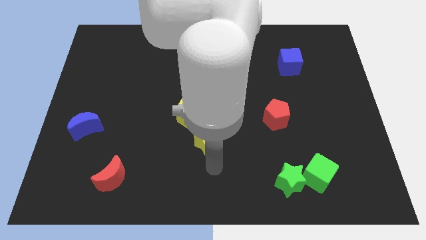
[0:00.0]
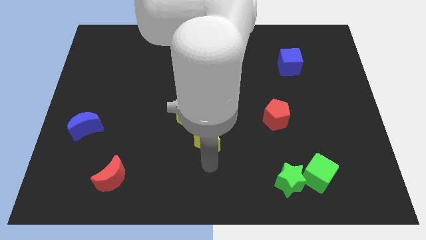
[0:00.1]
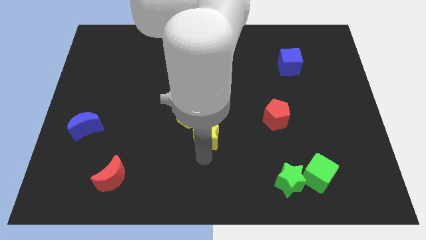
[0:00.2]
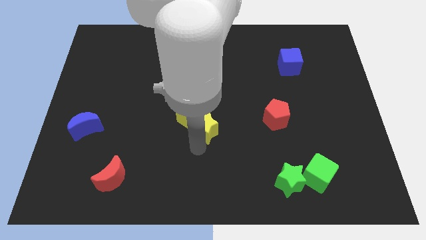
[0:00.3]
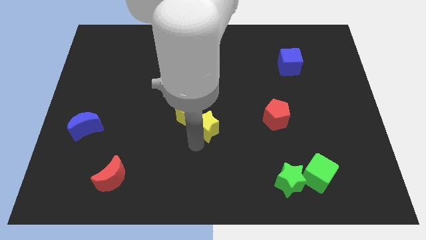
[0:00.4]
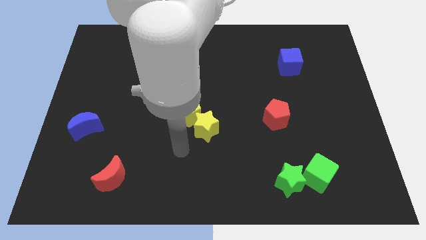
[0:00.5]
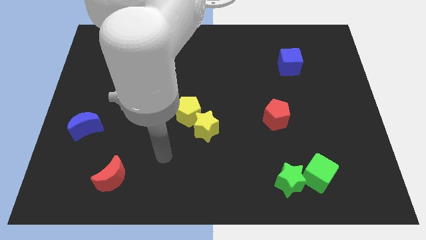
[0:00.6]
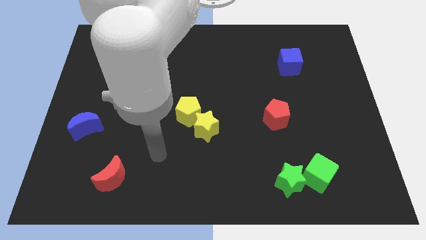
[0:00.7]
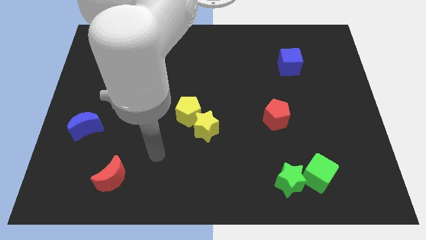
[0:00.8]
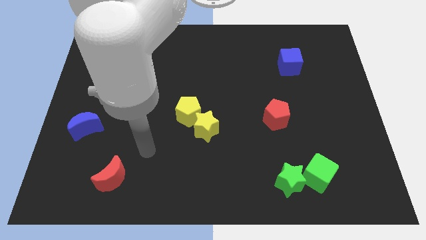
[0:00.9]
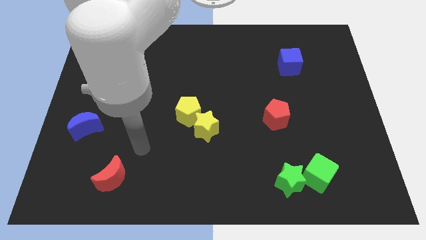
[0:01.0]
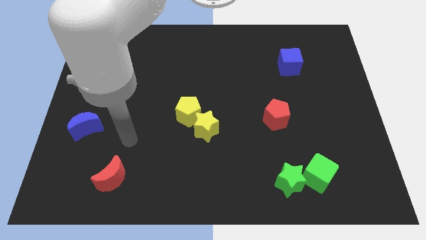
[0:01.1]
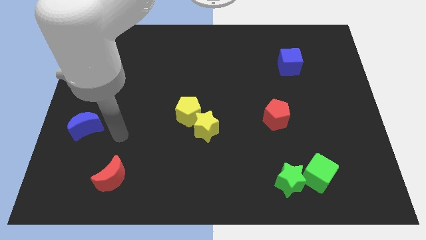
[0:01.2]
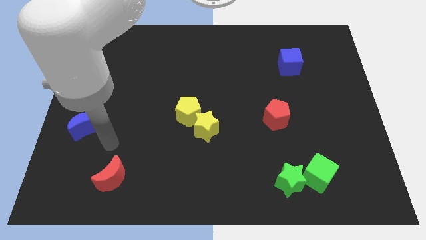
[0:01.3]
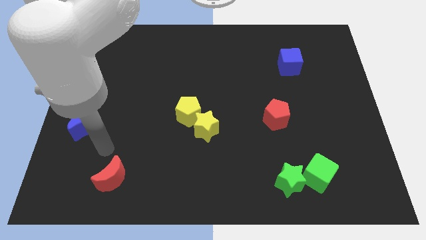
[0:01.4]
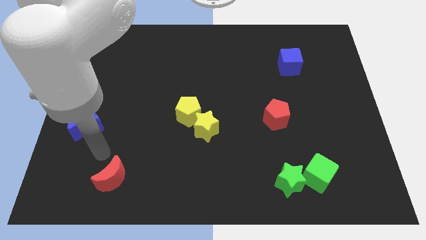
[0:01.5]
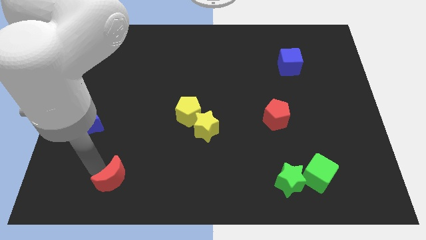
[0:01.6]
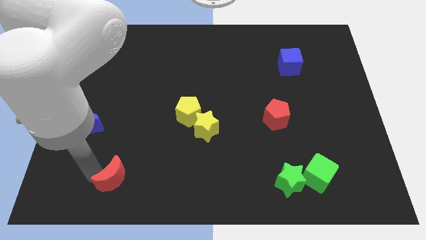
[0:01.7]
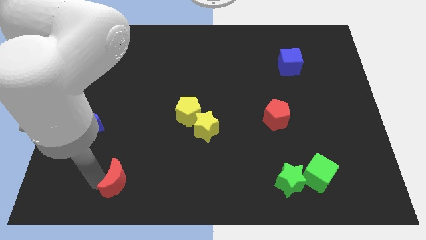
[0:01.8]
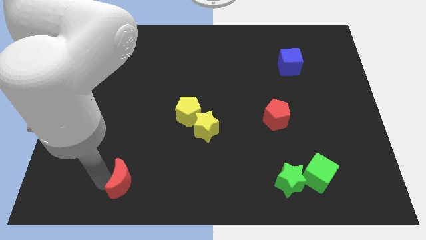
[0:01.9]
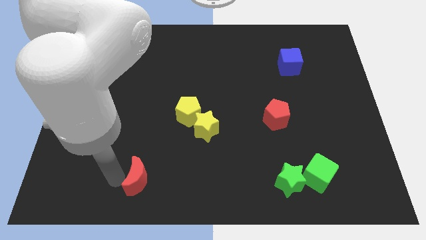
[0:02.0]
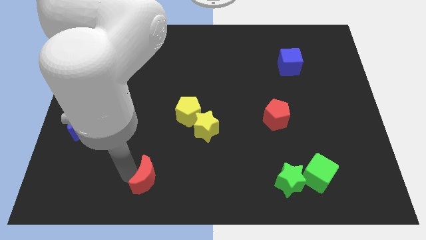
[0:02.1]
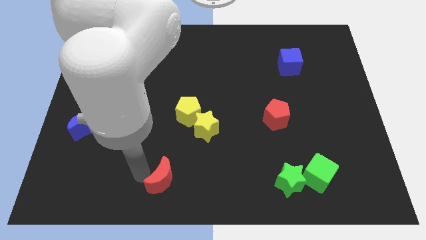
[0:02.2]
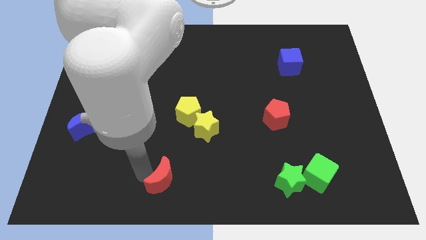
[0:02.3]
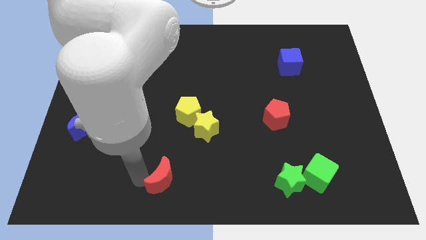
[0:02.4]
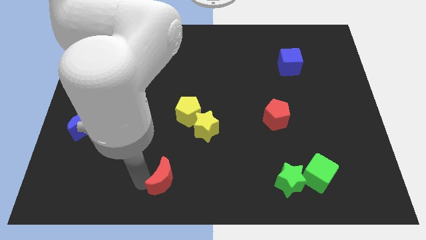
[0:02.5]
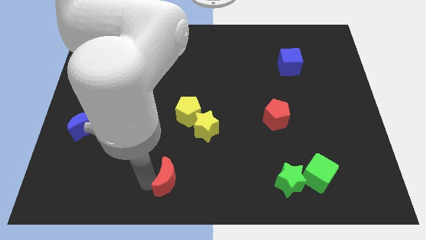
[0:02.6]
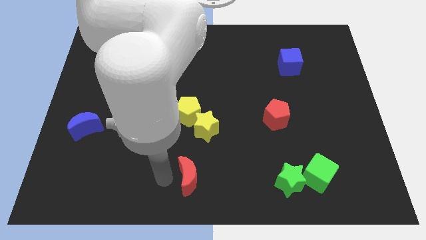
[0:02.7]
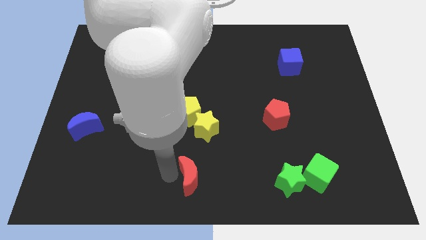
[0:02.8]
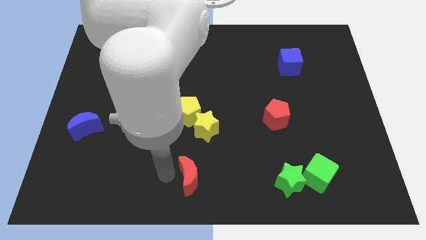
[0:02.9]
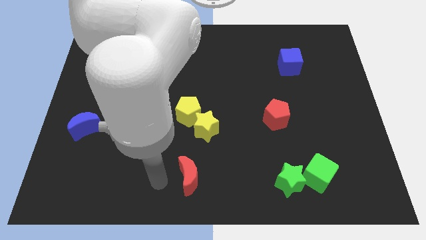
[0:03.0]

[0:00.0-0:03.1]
place the red moon towards the bottom center of the board

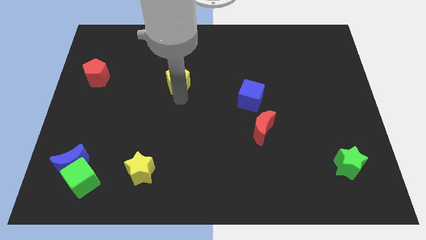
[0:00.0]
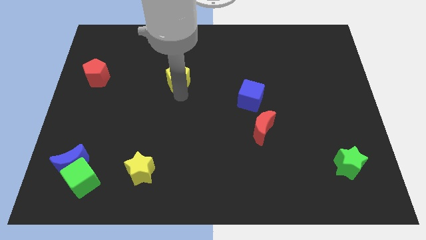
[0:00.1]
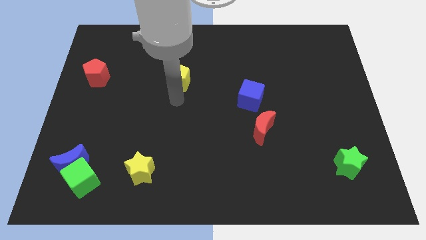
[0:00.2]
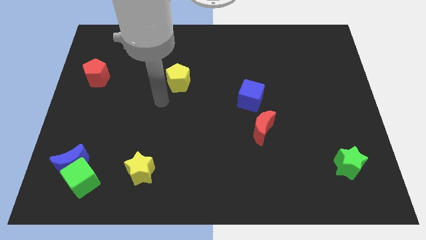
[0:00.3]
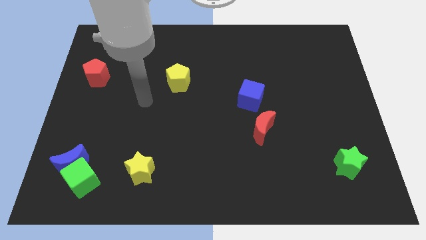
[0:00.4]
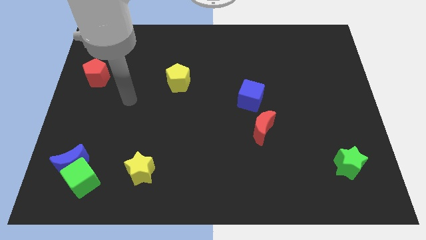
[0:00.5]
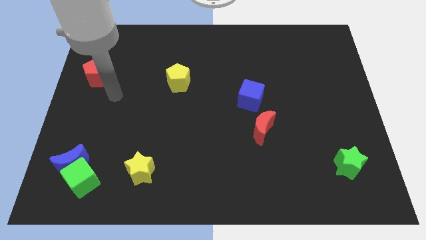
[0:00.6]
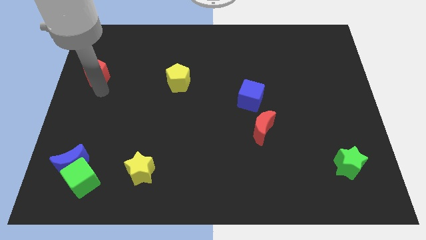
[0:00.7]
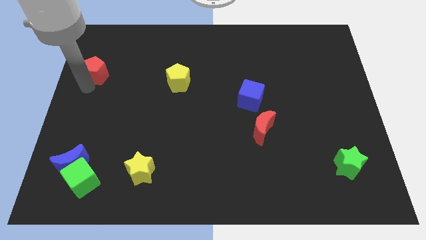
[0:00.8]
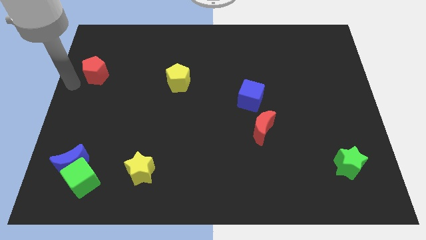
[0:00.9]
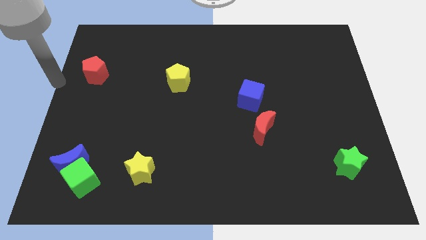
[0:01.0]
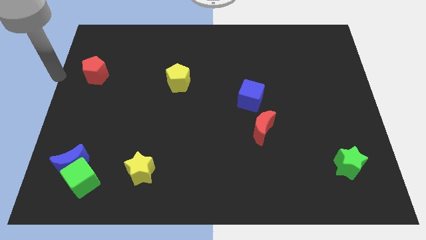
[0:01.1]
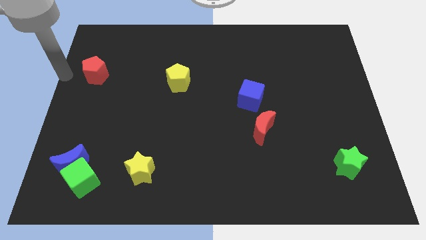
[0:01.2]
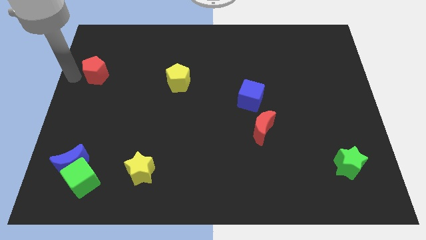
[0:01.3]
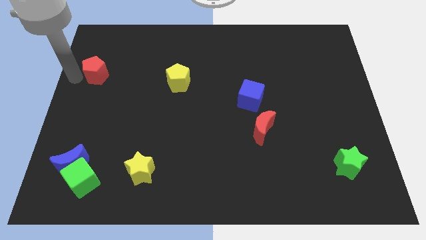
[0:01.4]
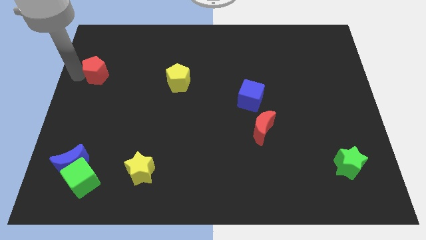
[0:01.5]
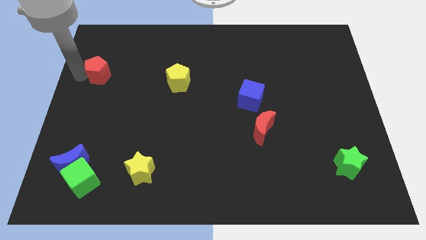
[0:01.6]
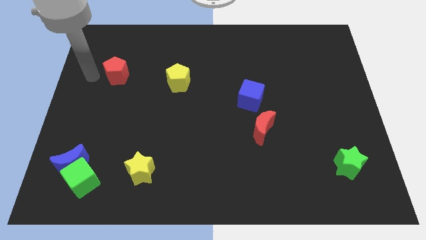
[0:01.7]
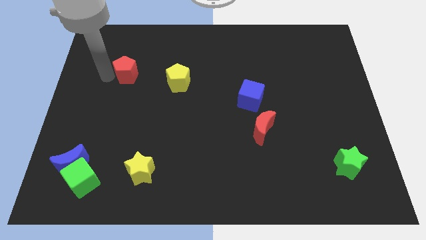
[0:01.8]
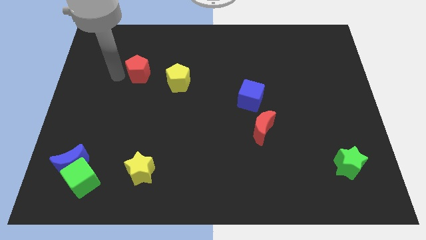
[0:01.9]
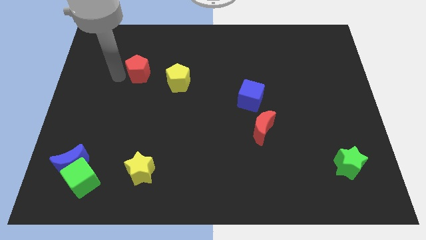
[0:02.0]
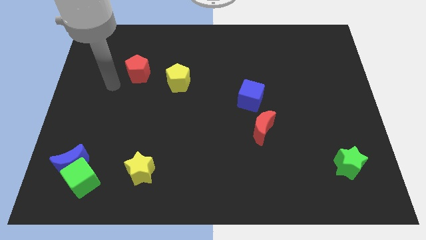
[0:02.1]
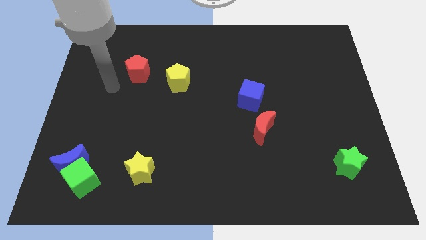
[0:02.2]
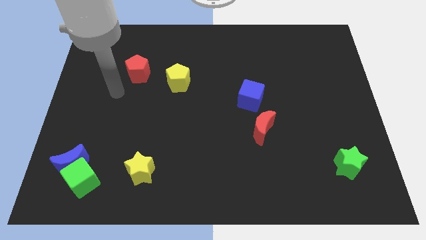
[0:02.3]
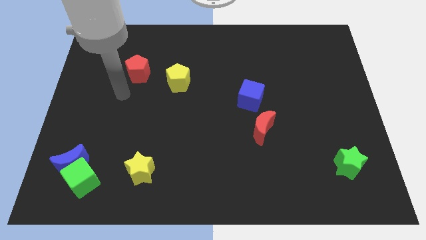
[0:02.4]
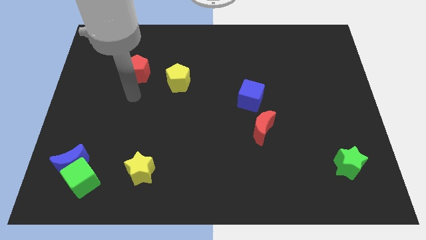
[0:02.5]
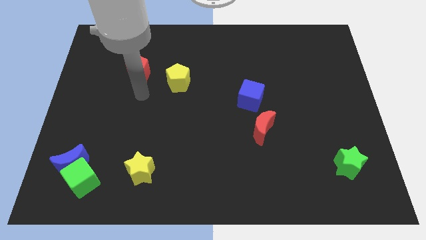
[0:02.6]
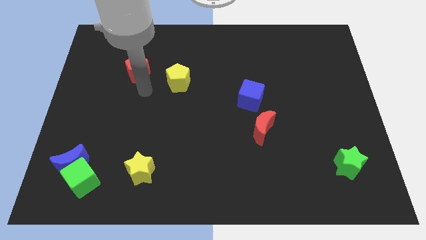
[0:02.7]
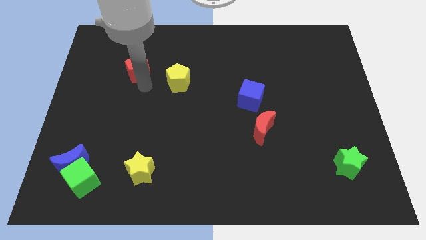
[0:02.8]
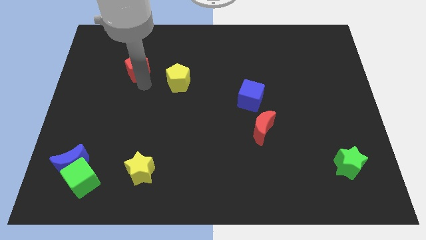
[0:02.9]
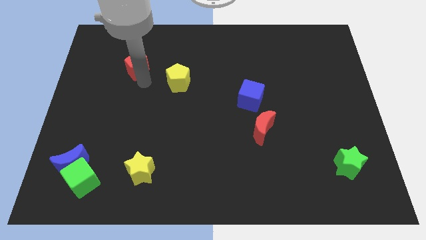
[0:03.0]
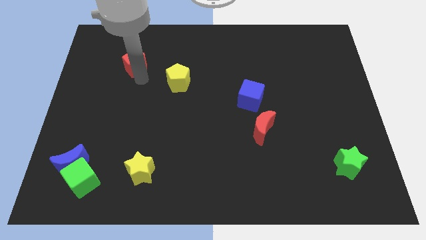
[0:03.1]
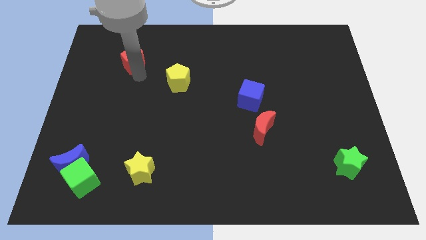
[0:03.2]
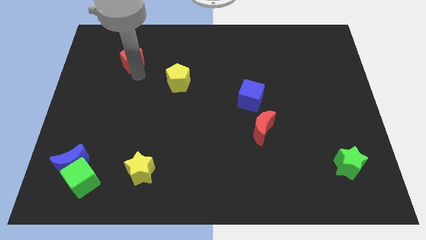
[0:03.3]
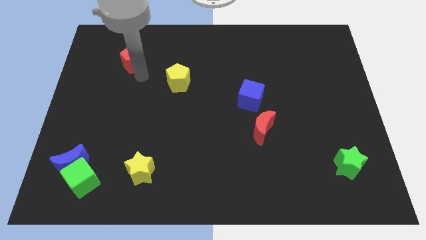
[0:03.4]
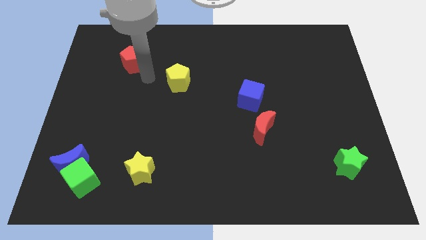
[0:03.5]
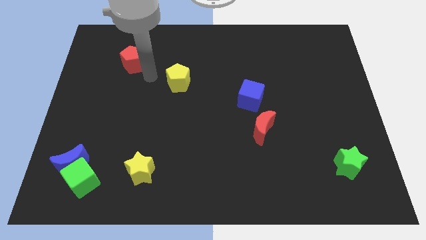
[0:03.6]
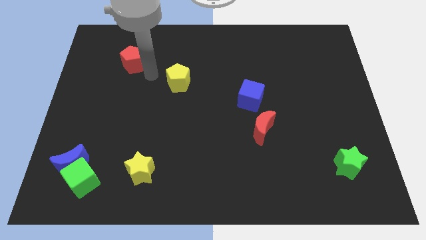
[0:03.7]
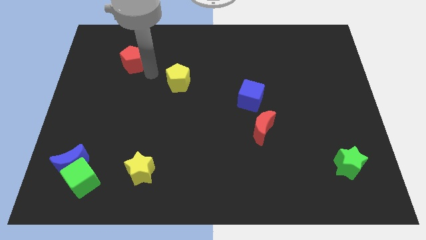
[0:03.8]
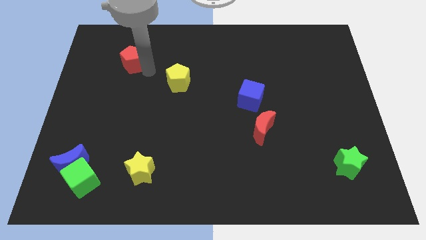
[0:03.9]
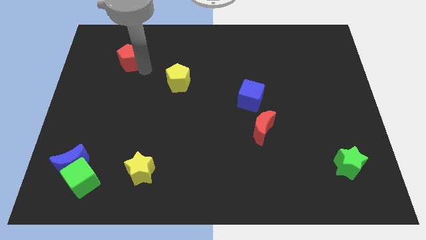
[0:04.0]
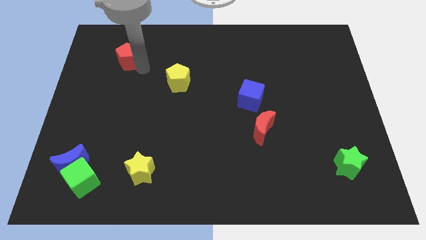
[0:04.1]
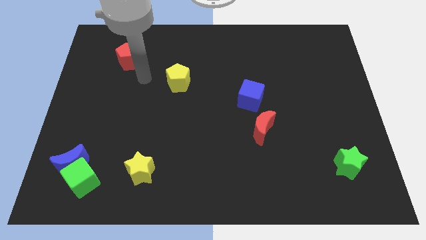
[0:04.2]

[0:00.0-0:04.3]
move the red pentagon diagonally above the top left side of the yellow pentagon

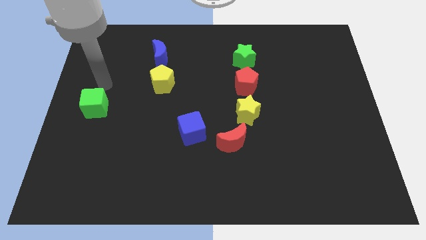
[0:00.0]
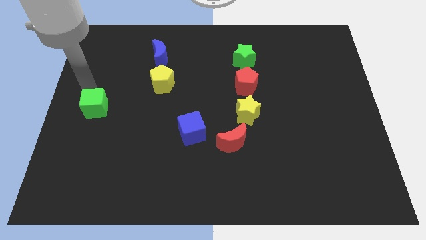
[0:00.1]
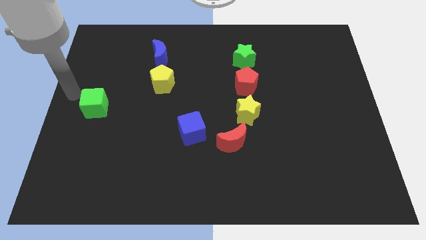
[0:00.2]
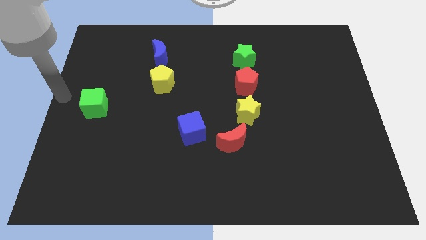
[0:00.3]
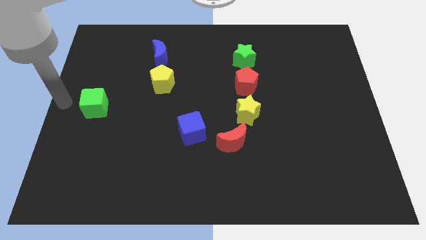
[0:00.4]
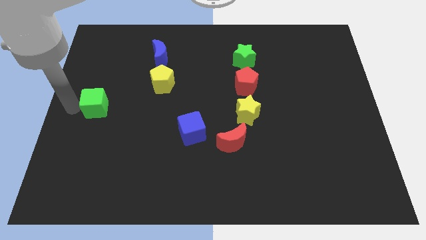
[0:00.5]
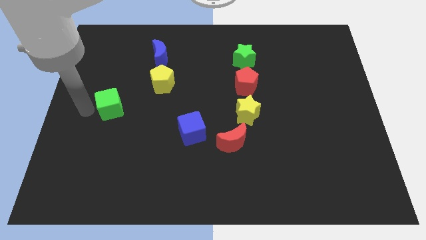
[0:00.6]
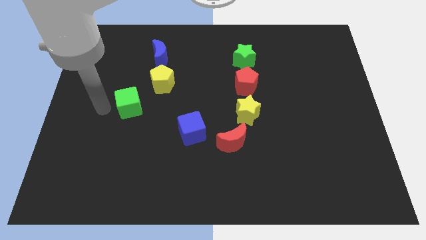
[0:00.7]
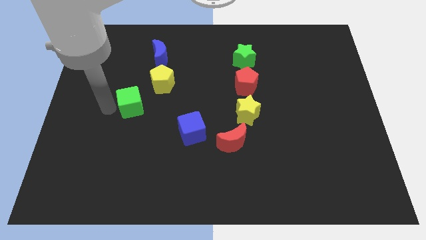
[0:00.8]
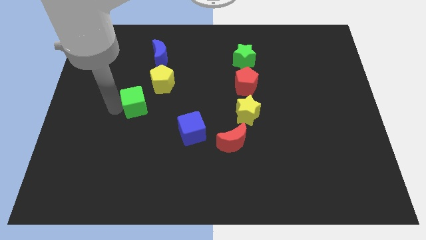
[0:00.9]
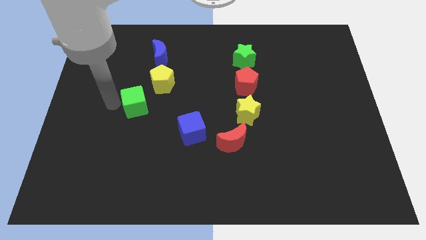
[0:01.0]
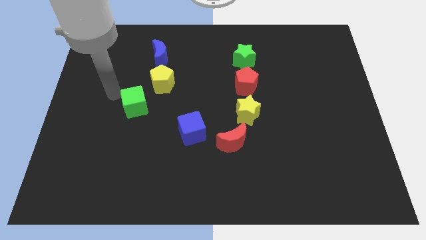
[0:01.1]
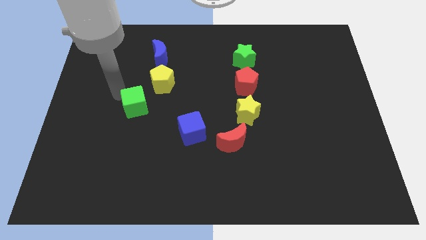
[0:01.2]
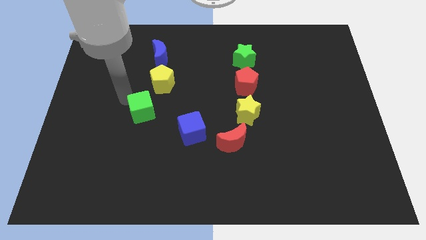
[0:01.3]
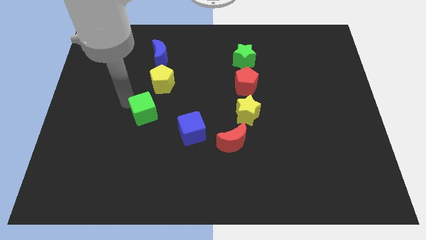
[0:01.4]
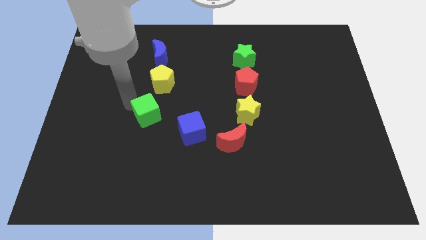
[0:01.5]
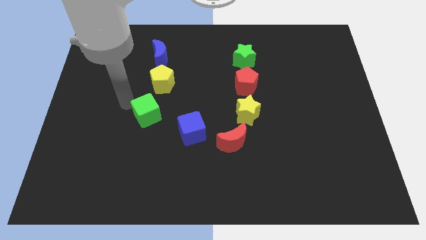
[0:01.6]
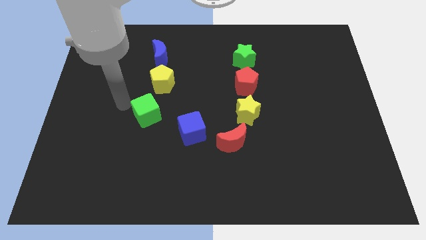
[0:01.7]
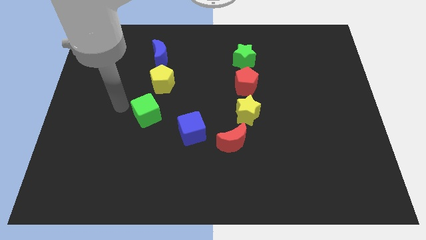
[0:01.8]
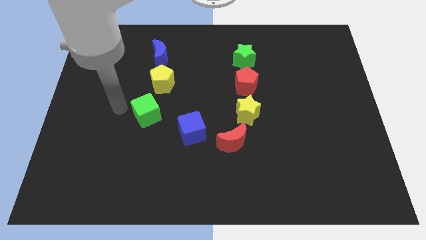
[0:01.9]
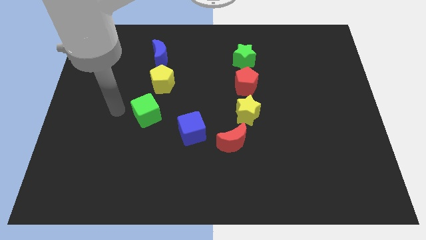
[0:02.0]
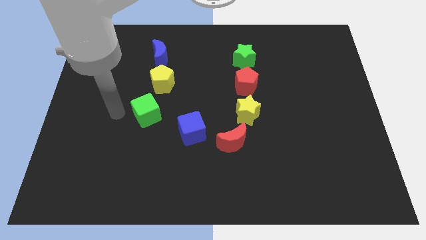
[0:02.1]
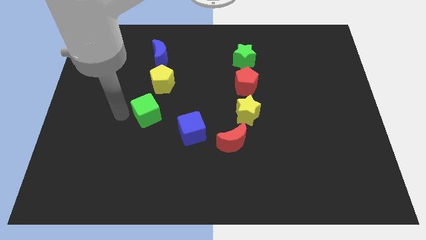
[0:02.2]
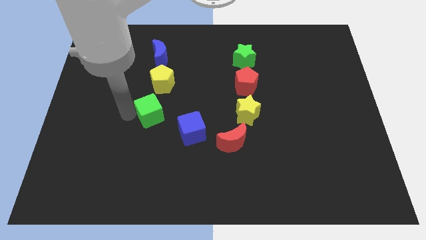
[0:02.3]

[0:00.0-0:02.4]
move green cube towards right
